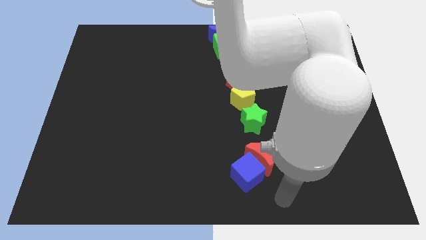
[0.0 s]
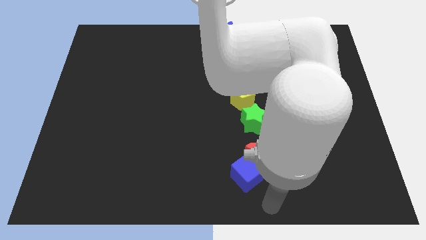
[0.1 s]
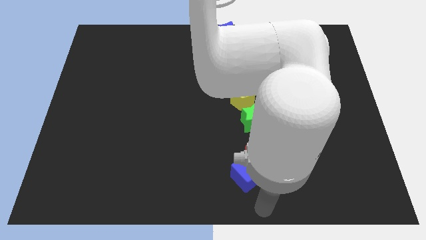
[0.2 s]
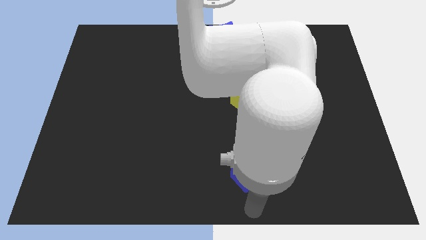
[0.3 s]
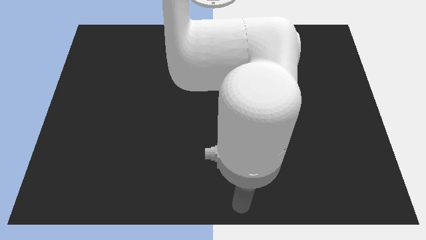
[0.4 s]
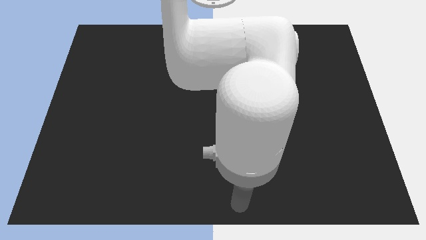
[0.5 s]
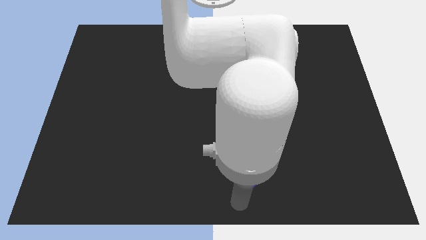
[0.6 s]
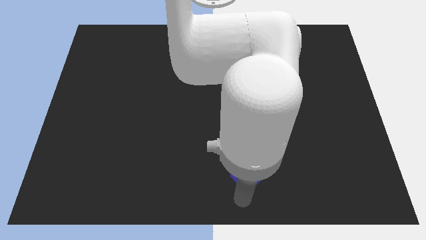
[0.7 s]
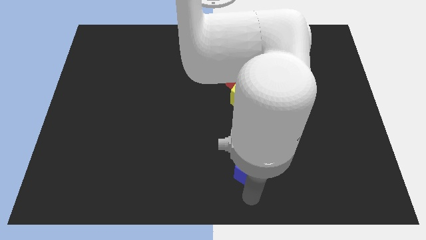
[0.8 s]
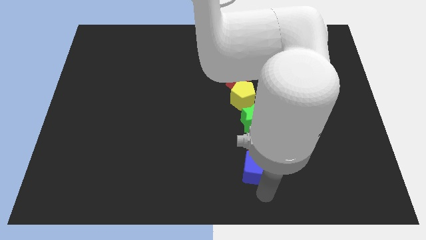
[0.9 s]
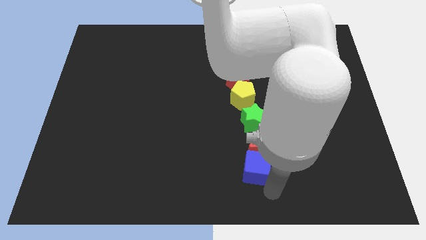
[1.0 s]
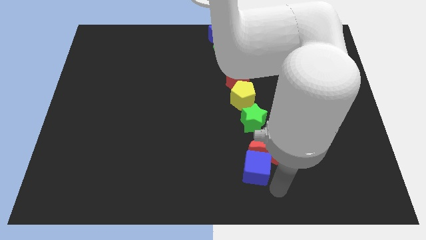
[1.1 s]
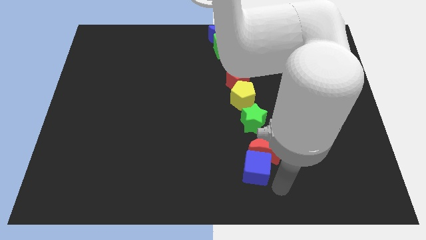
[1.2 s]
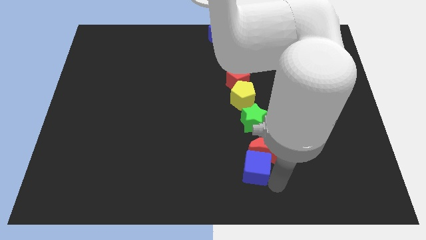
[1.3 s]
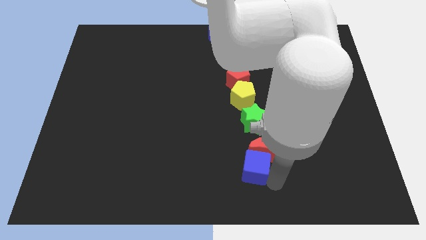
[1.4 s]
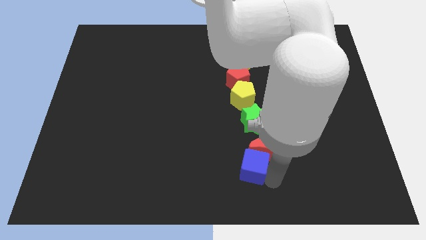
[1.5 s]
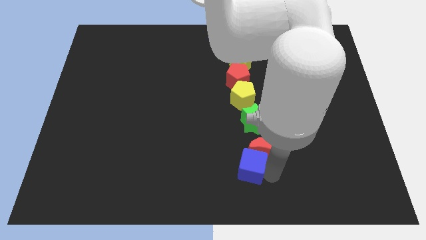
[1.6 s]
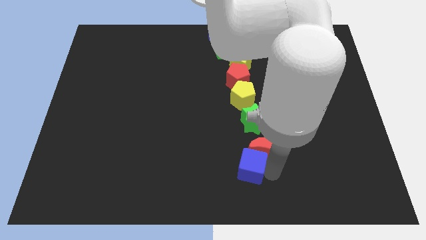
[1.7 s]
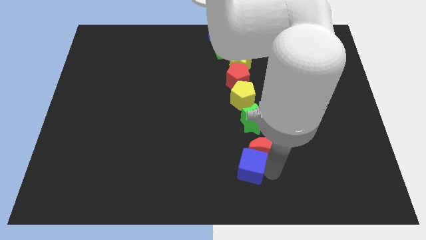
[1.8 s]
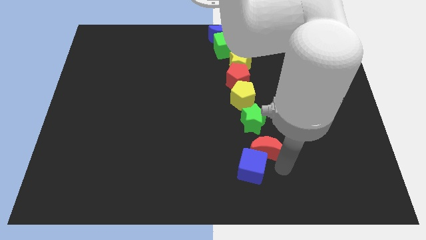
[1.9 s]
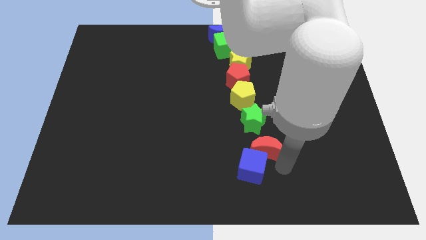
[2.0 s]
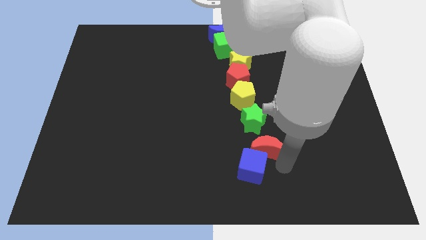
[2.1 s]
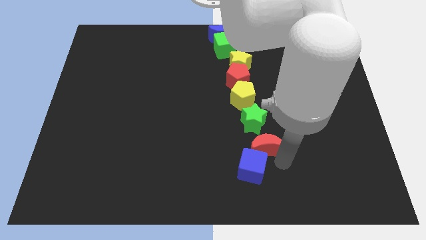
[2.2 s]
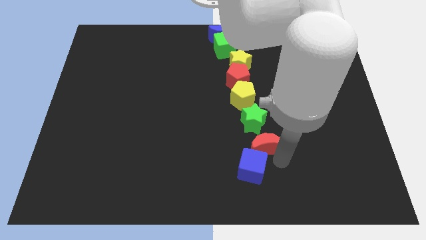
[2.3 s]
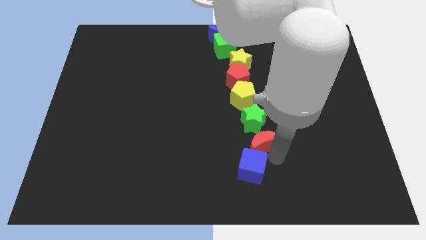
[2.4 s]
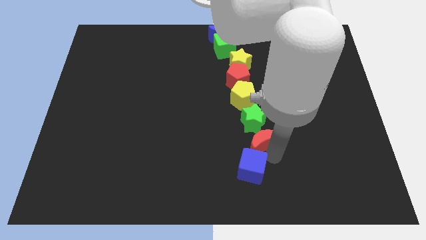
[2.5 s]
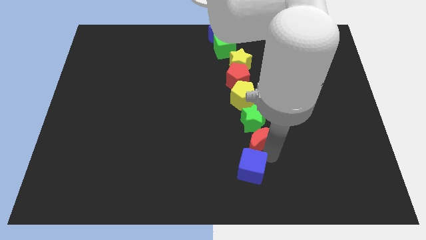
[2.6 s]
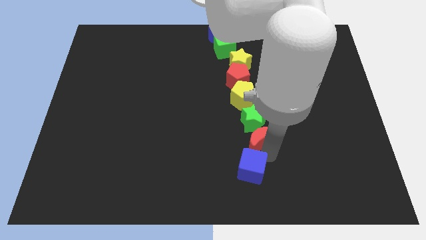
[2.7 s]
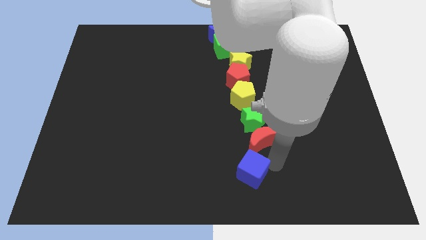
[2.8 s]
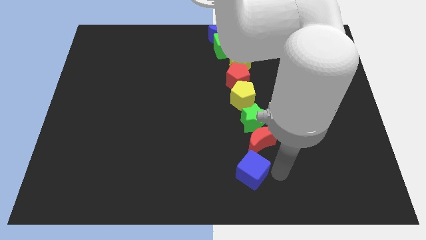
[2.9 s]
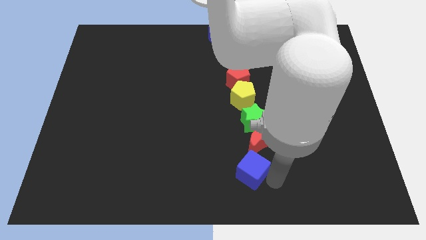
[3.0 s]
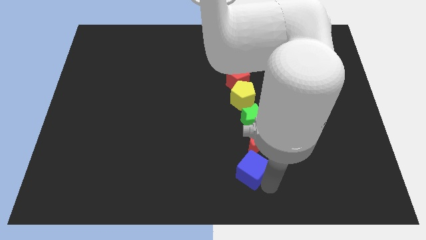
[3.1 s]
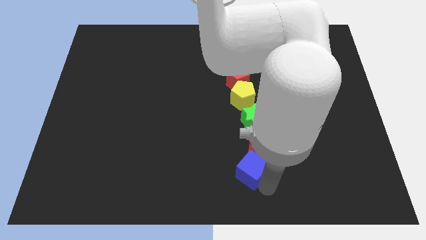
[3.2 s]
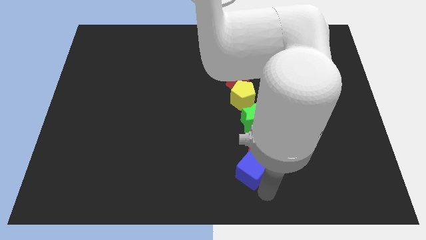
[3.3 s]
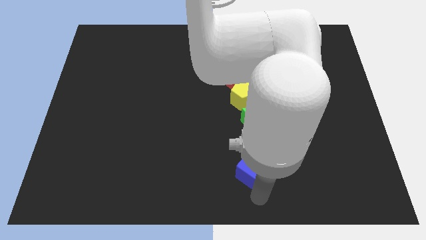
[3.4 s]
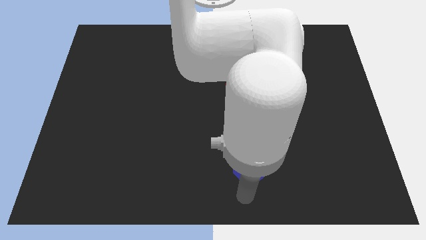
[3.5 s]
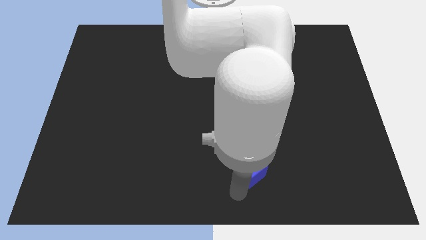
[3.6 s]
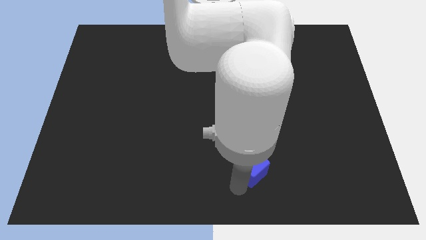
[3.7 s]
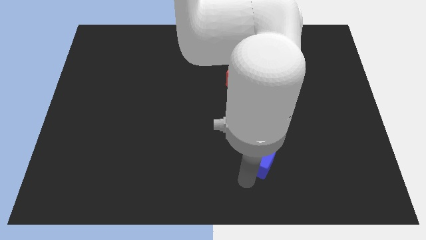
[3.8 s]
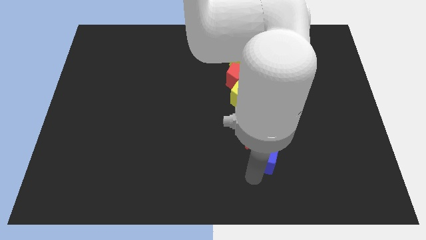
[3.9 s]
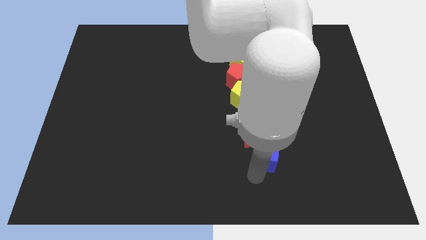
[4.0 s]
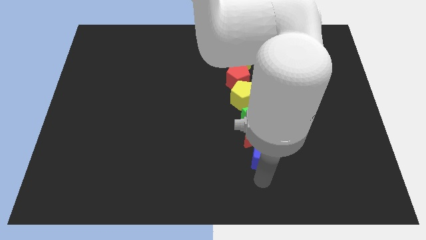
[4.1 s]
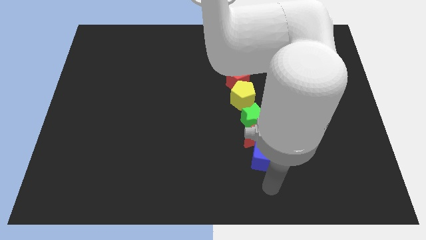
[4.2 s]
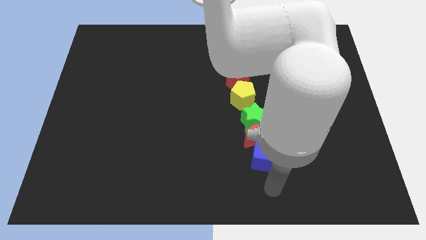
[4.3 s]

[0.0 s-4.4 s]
push the red crescent and blue cube close to the red moon

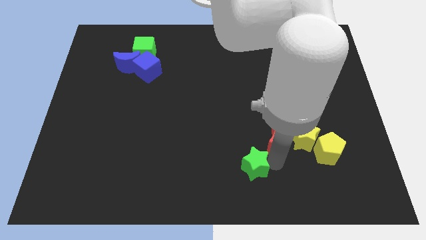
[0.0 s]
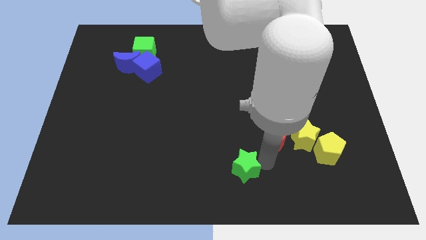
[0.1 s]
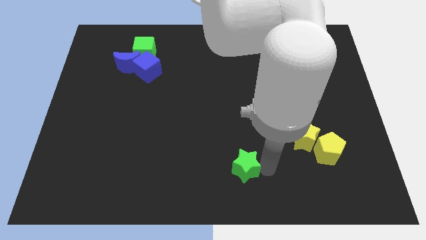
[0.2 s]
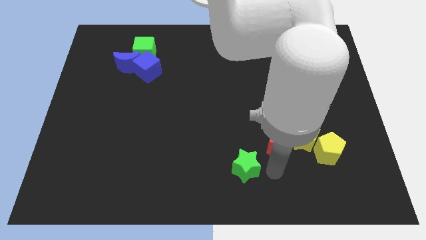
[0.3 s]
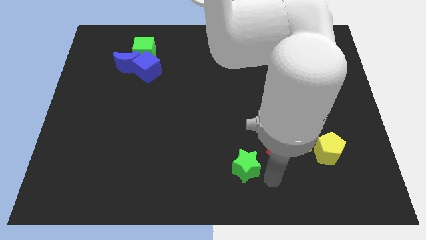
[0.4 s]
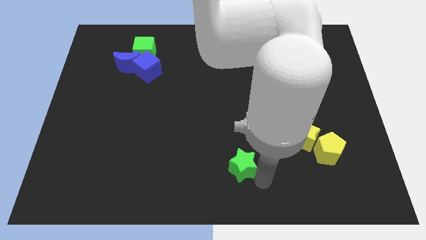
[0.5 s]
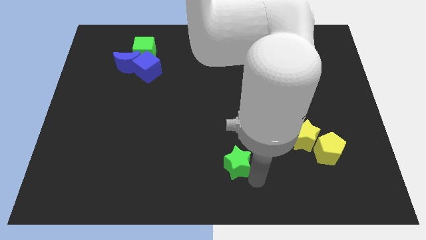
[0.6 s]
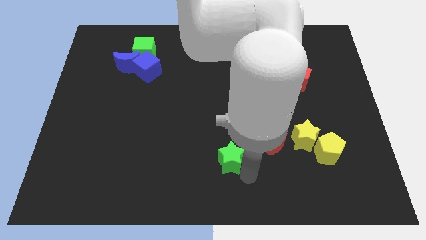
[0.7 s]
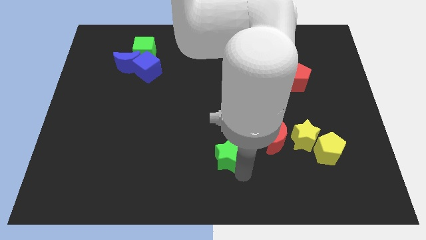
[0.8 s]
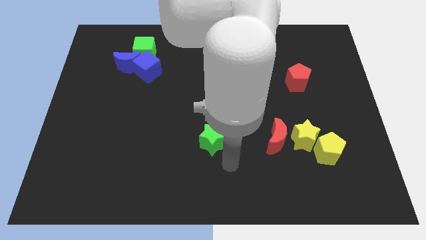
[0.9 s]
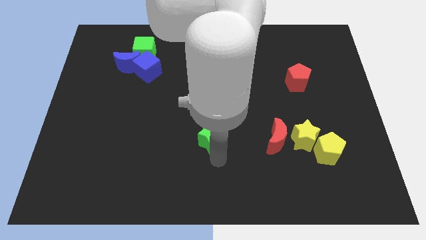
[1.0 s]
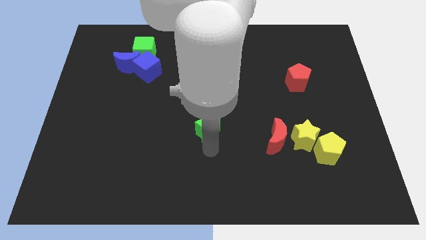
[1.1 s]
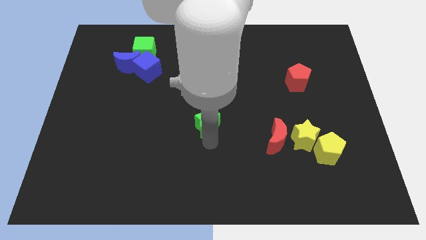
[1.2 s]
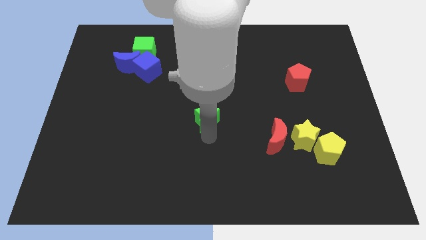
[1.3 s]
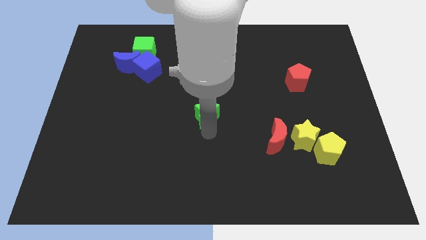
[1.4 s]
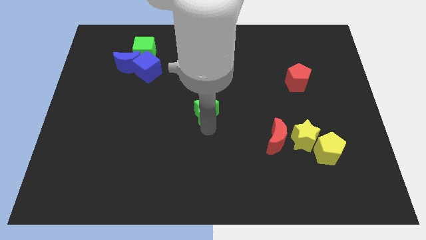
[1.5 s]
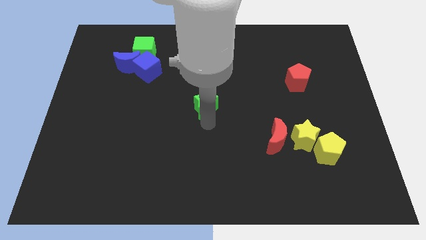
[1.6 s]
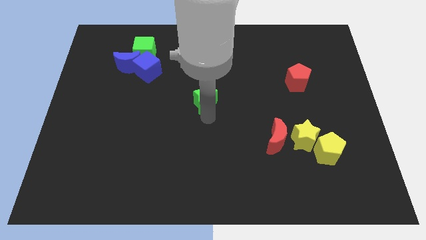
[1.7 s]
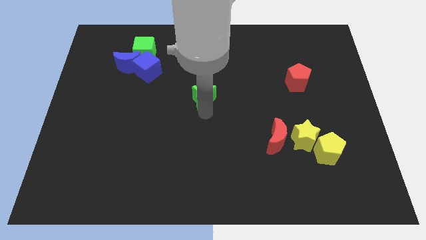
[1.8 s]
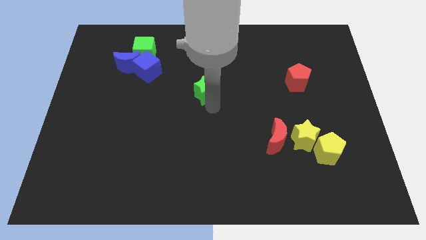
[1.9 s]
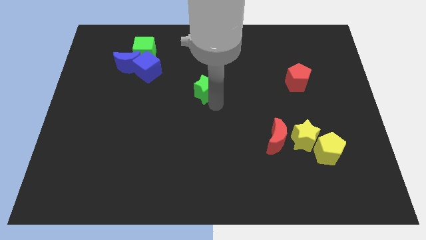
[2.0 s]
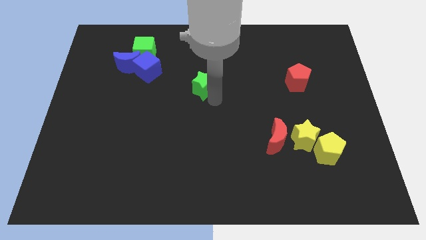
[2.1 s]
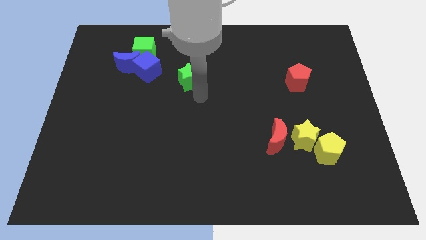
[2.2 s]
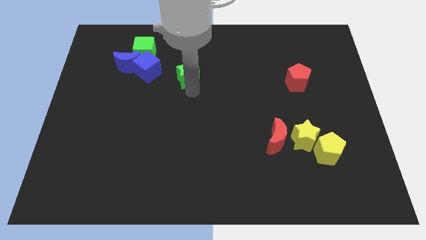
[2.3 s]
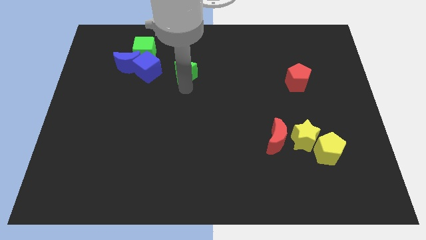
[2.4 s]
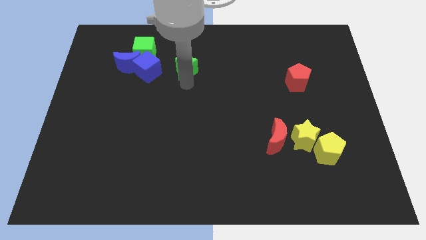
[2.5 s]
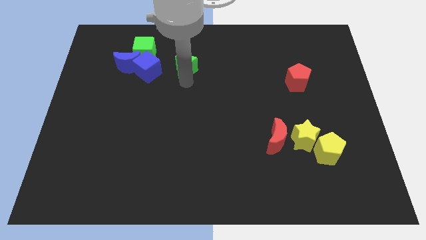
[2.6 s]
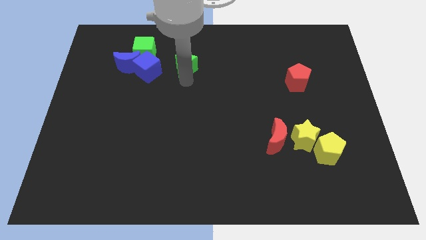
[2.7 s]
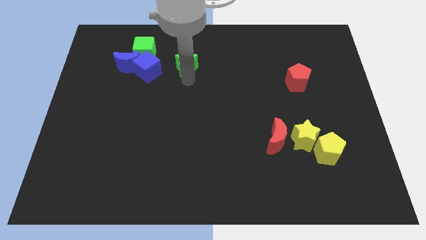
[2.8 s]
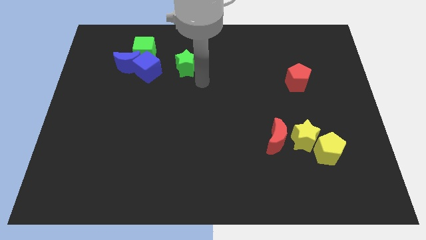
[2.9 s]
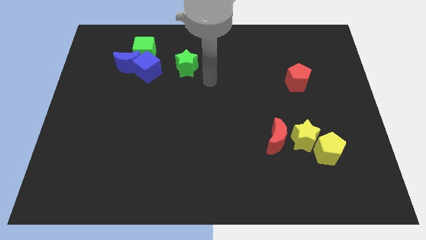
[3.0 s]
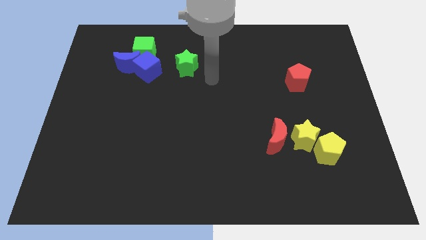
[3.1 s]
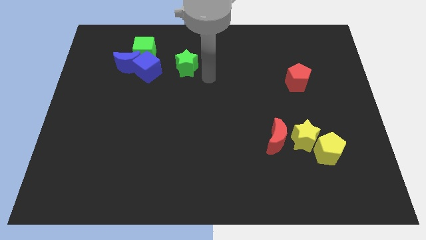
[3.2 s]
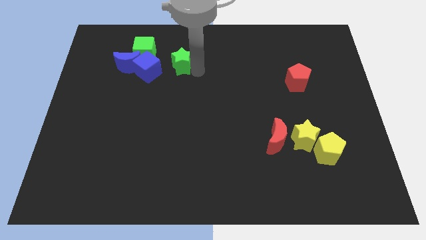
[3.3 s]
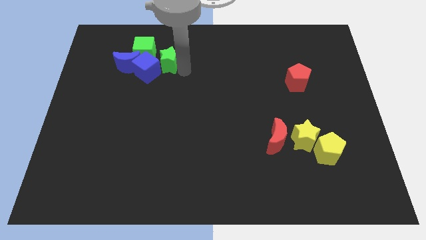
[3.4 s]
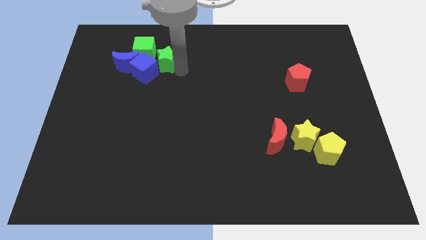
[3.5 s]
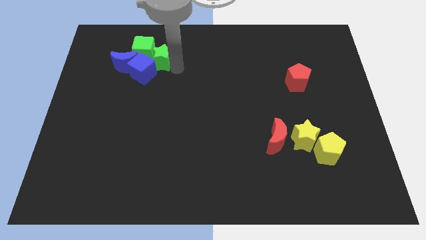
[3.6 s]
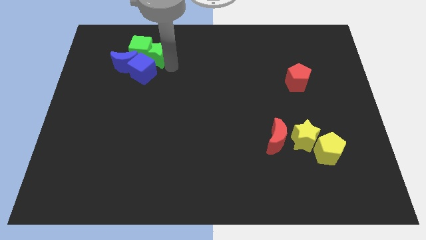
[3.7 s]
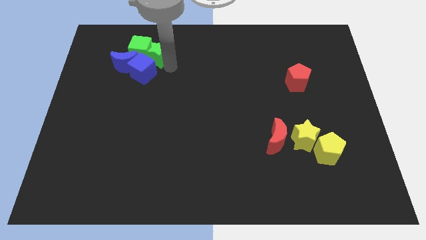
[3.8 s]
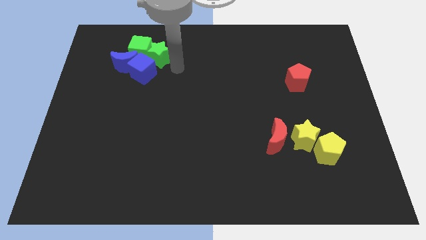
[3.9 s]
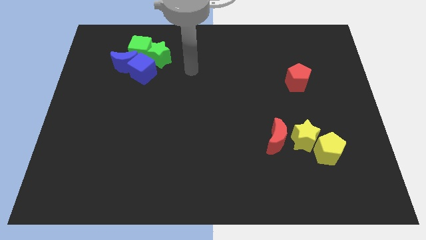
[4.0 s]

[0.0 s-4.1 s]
move green star into green cube

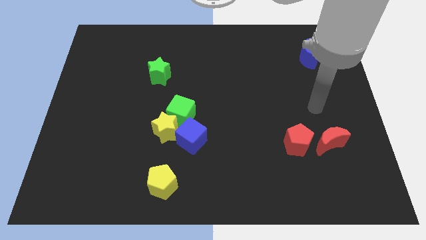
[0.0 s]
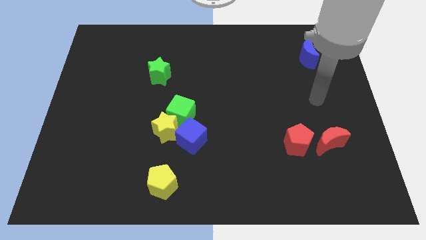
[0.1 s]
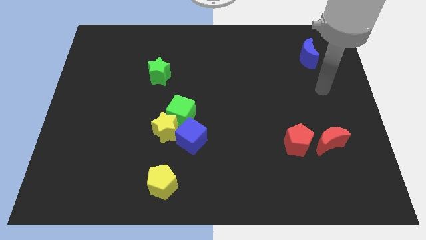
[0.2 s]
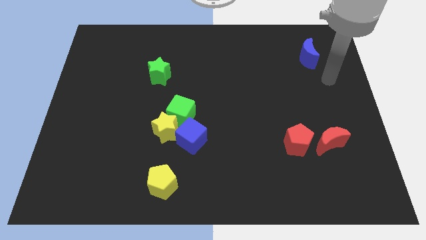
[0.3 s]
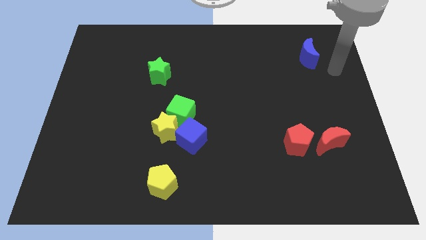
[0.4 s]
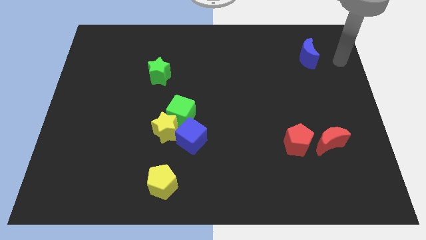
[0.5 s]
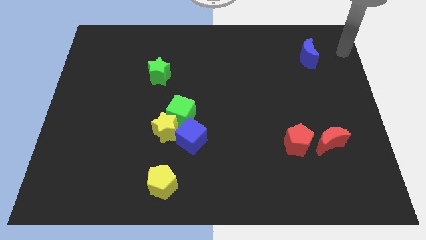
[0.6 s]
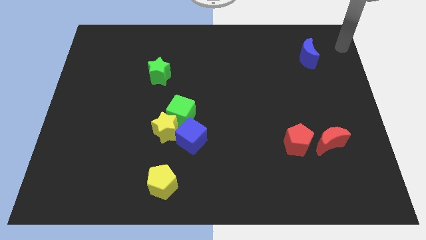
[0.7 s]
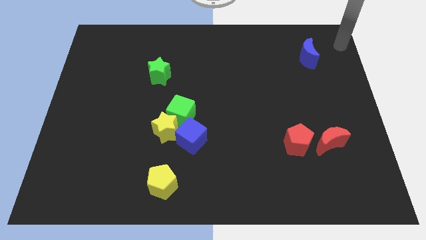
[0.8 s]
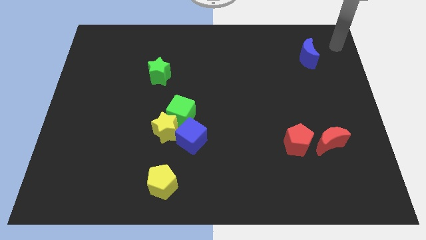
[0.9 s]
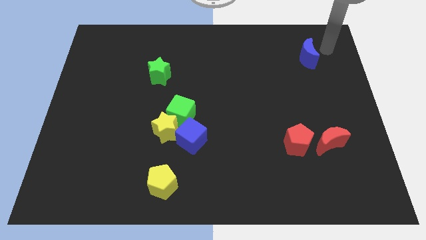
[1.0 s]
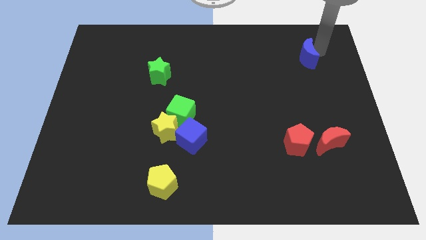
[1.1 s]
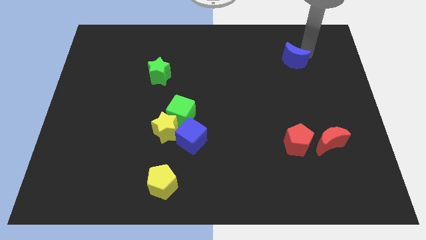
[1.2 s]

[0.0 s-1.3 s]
touch the right side of the blue crescent
